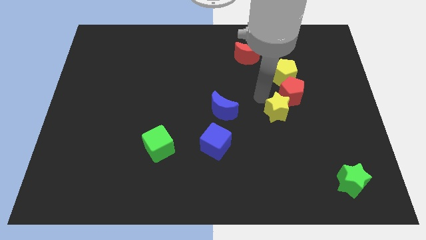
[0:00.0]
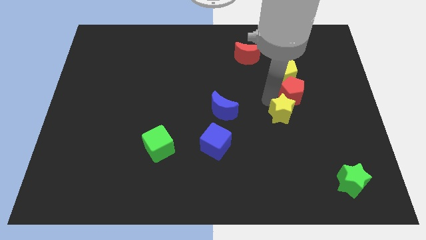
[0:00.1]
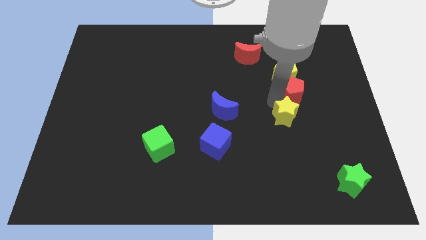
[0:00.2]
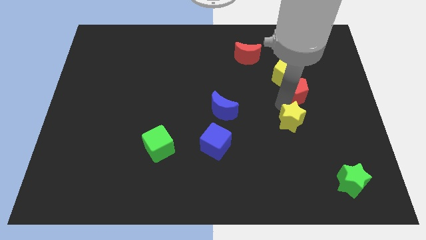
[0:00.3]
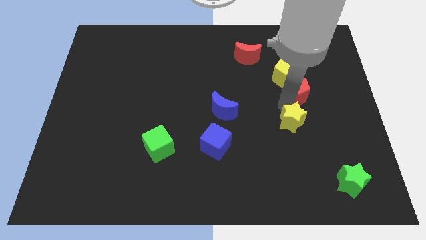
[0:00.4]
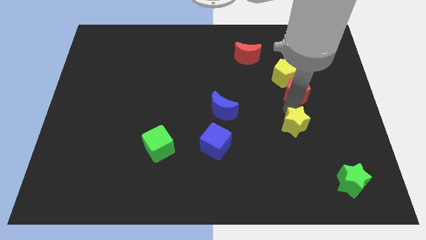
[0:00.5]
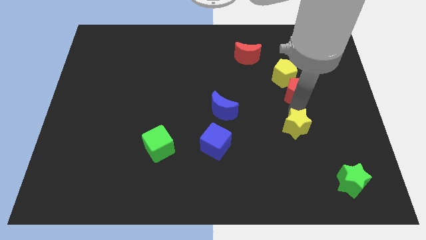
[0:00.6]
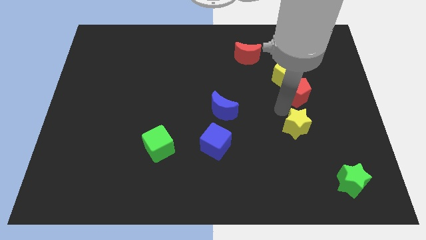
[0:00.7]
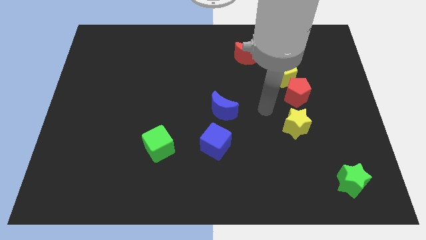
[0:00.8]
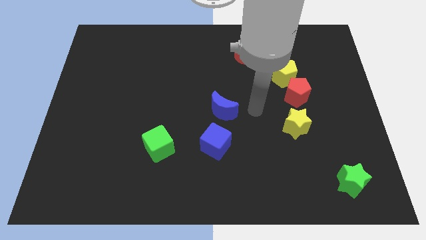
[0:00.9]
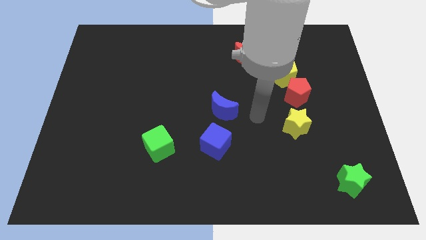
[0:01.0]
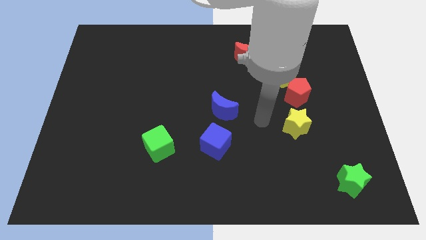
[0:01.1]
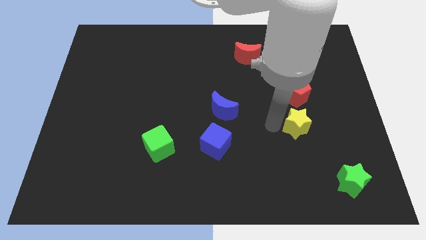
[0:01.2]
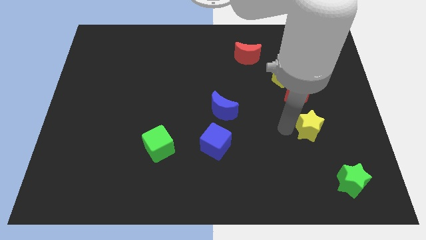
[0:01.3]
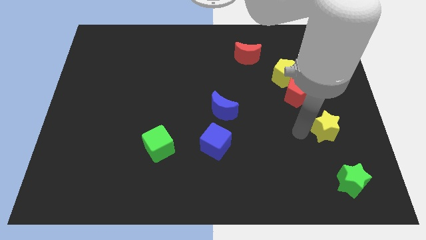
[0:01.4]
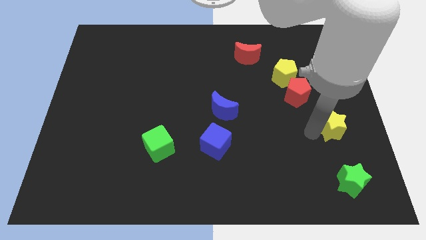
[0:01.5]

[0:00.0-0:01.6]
place the yellow star below the red pentagon

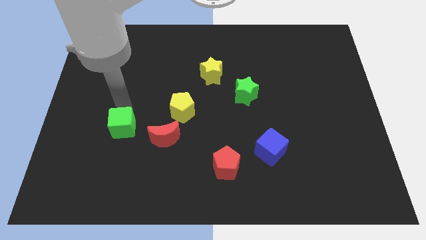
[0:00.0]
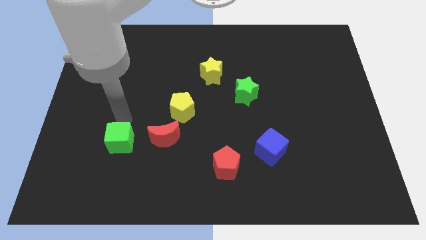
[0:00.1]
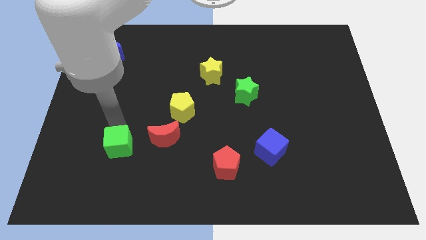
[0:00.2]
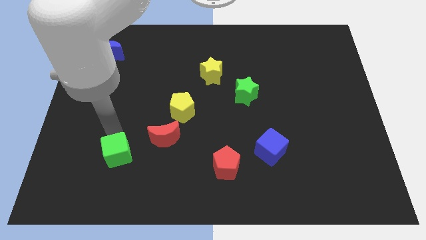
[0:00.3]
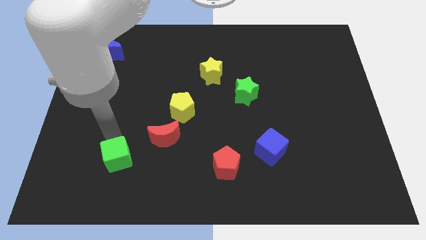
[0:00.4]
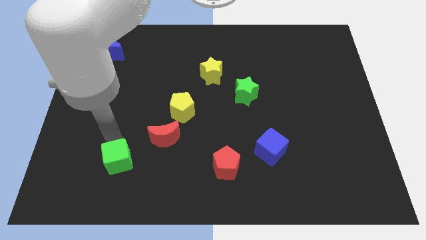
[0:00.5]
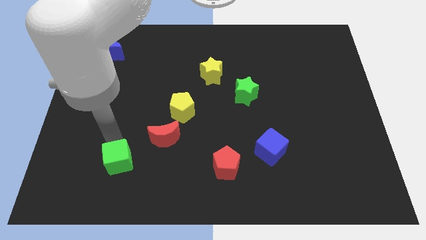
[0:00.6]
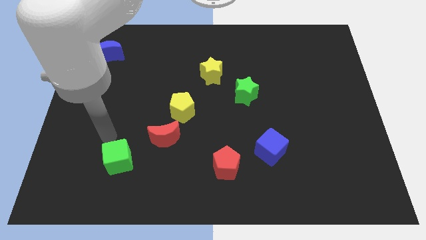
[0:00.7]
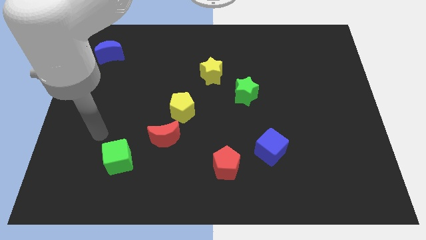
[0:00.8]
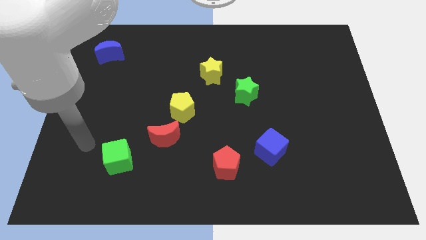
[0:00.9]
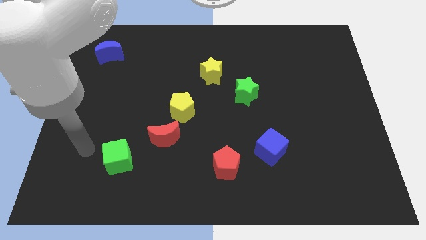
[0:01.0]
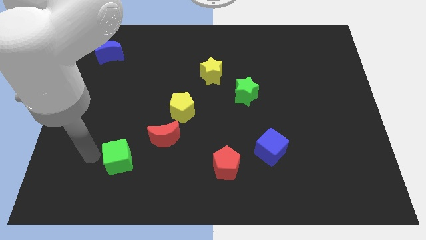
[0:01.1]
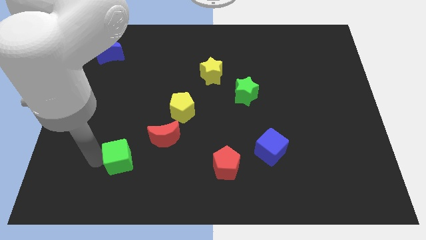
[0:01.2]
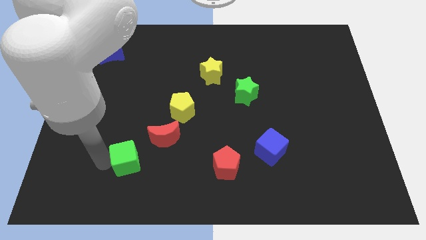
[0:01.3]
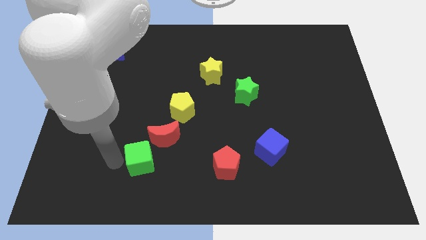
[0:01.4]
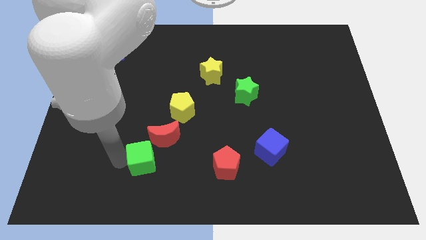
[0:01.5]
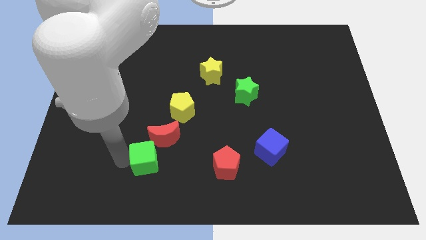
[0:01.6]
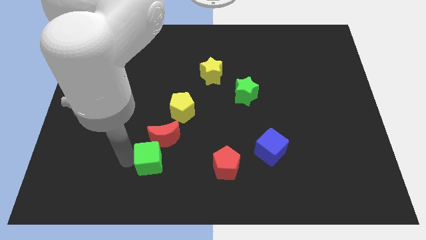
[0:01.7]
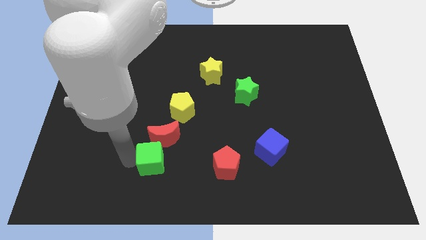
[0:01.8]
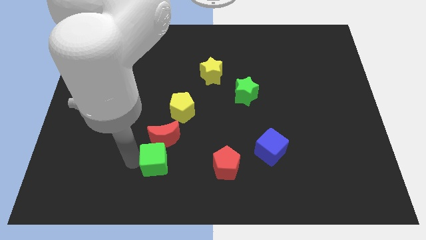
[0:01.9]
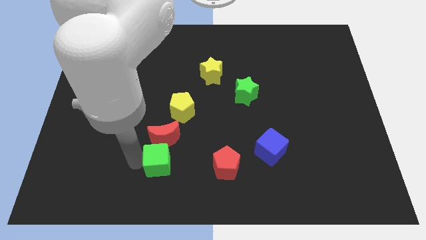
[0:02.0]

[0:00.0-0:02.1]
slide green cube below the red moon

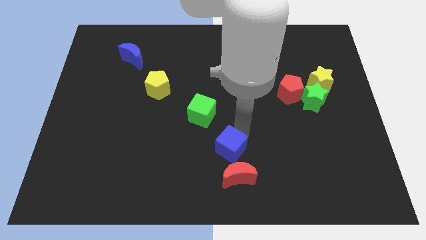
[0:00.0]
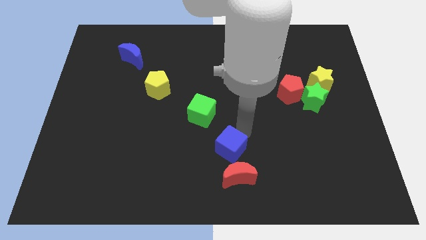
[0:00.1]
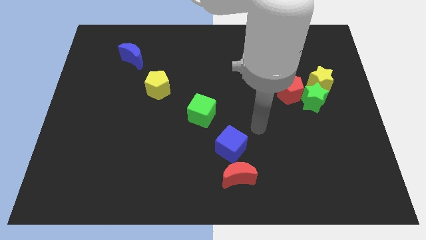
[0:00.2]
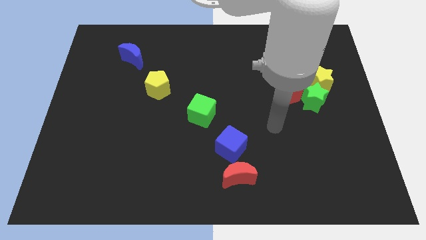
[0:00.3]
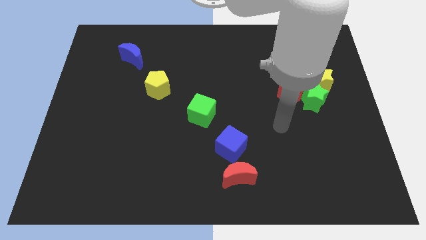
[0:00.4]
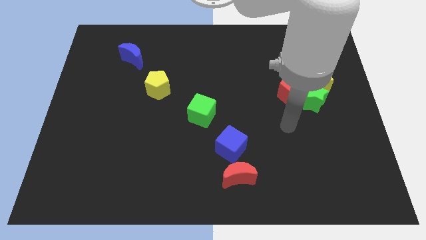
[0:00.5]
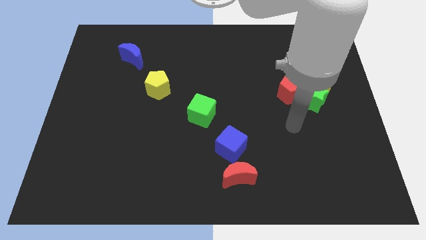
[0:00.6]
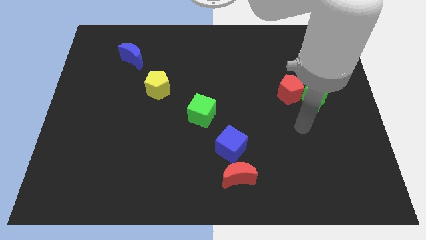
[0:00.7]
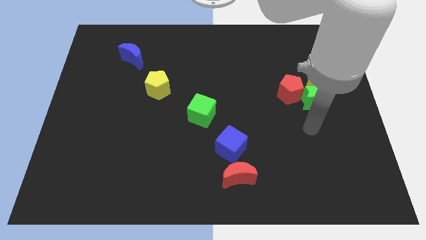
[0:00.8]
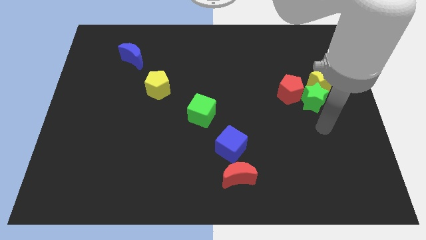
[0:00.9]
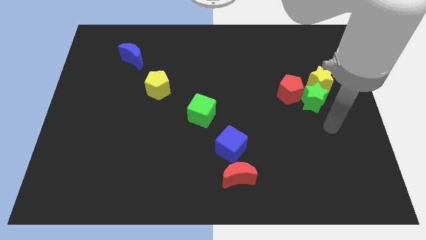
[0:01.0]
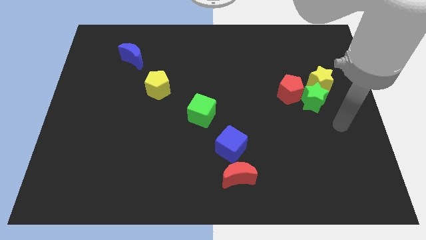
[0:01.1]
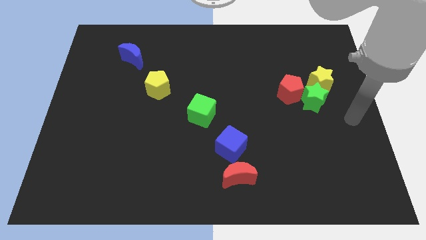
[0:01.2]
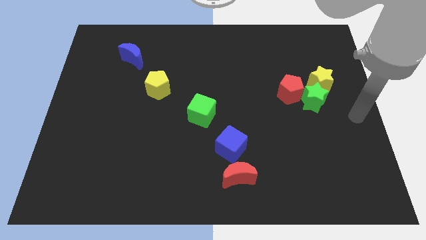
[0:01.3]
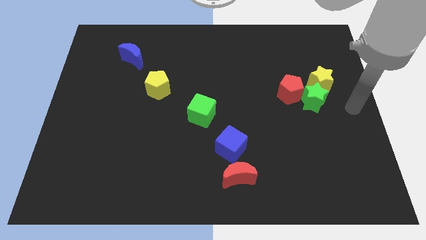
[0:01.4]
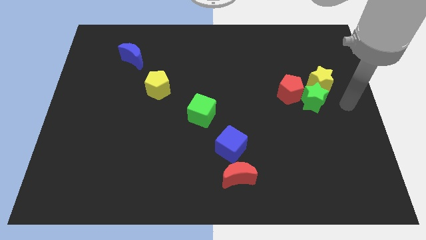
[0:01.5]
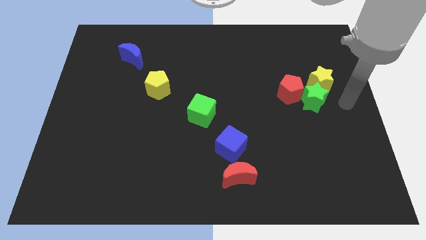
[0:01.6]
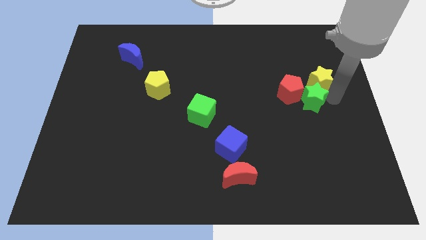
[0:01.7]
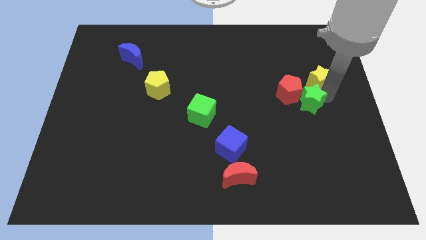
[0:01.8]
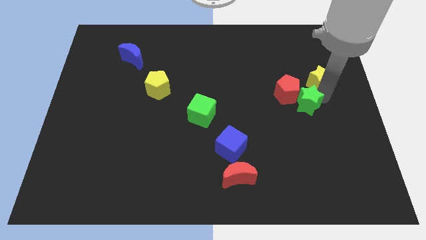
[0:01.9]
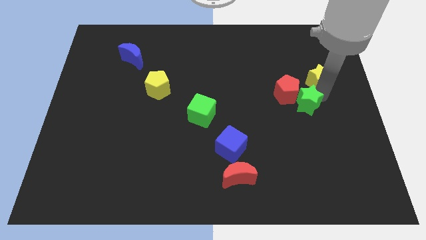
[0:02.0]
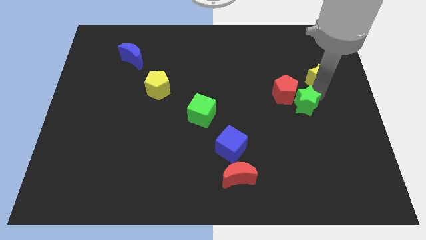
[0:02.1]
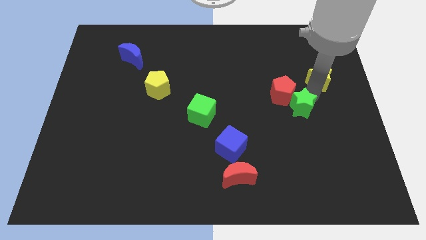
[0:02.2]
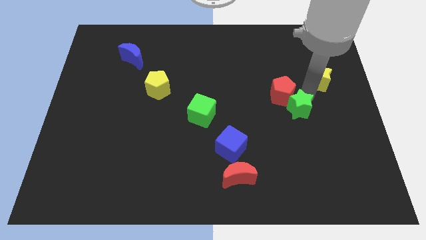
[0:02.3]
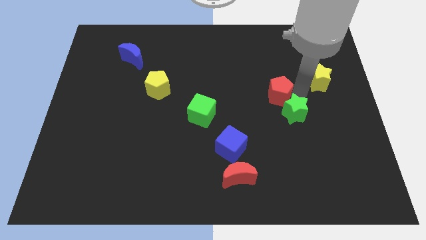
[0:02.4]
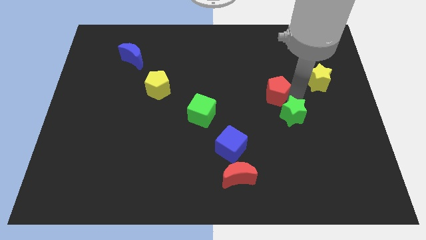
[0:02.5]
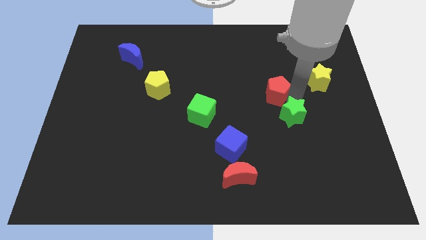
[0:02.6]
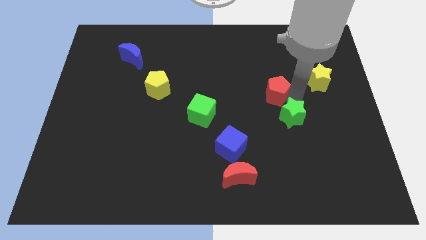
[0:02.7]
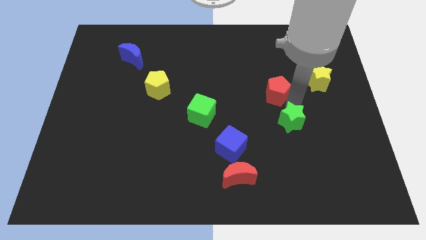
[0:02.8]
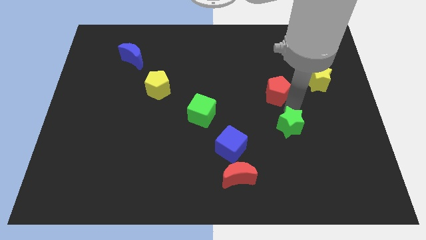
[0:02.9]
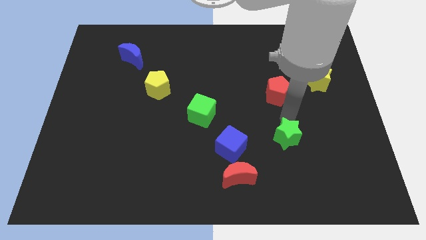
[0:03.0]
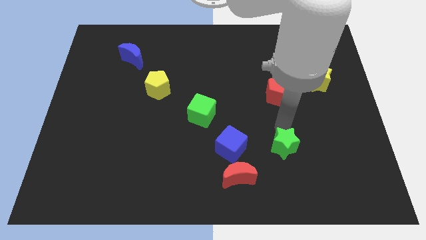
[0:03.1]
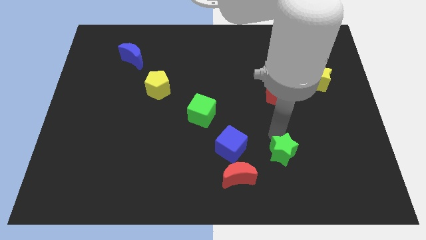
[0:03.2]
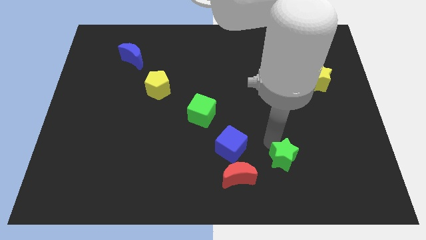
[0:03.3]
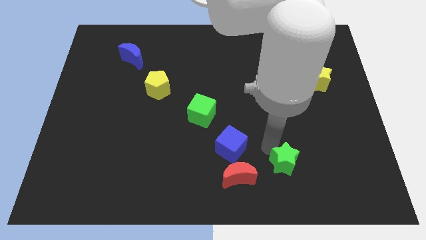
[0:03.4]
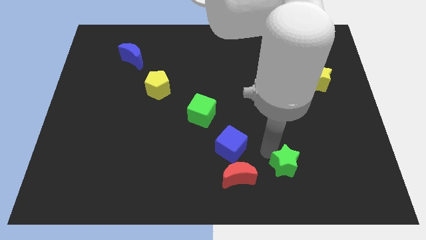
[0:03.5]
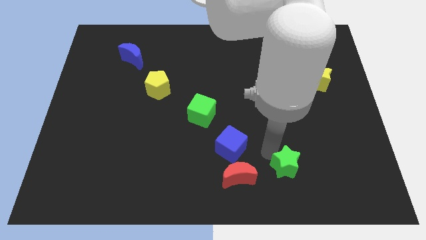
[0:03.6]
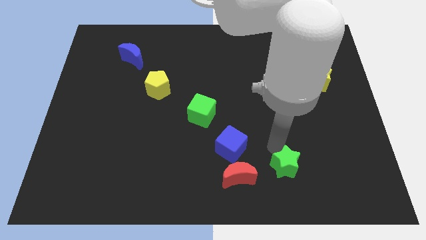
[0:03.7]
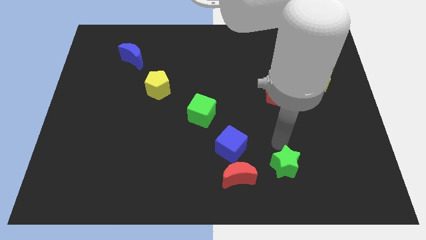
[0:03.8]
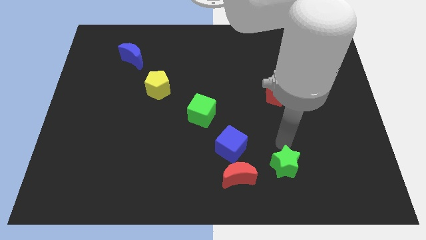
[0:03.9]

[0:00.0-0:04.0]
place the green star right of red crescent

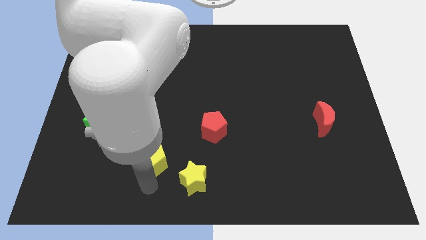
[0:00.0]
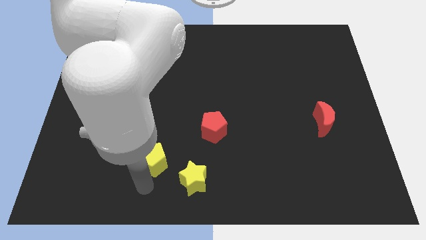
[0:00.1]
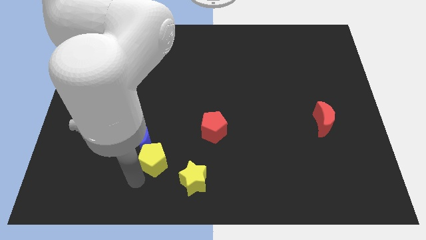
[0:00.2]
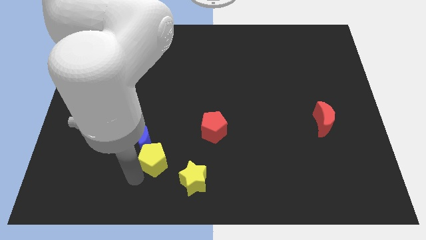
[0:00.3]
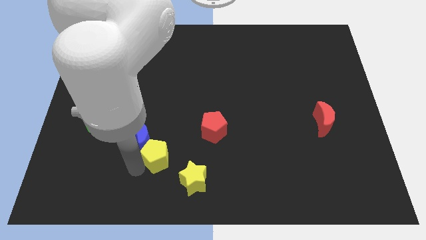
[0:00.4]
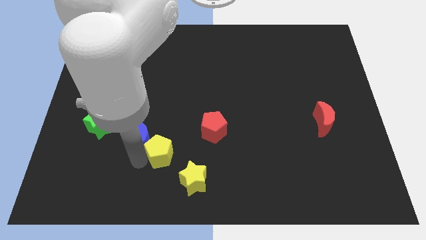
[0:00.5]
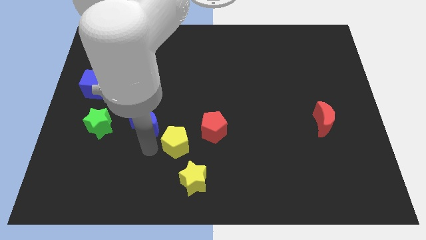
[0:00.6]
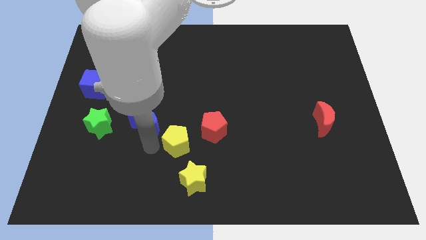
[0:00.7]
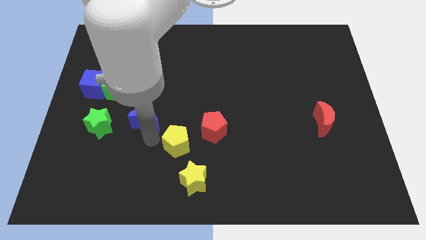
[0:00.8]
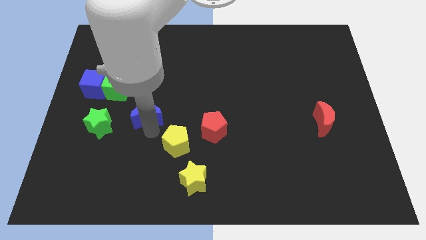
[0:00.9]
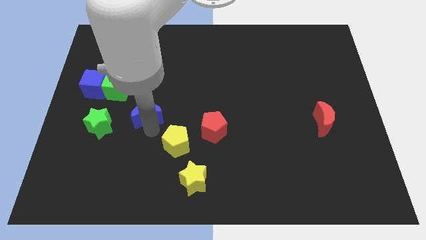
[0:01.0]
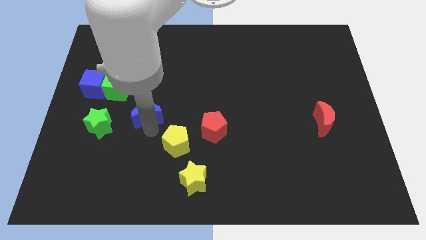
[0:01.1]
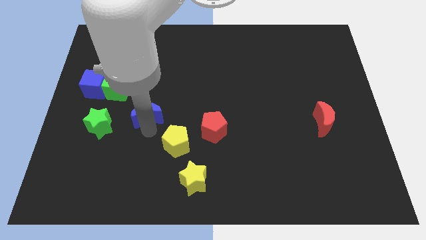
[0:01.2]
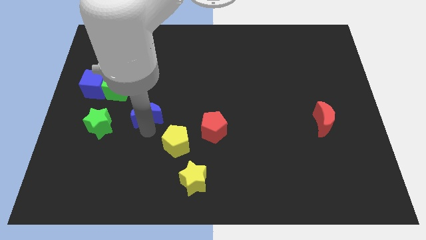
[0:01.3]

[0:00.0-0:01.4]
separate the blue crescent and the yellow pentagon
